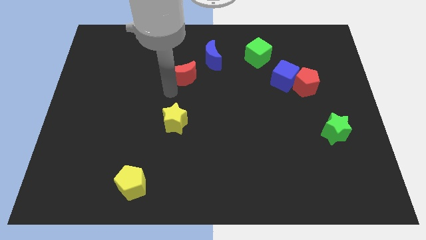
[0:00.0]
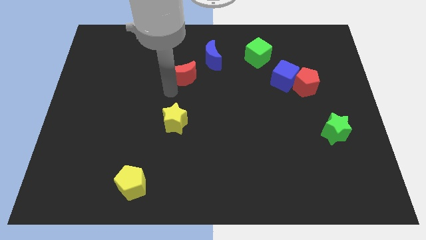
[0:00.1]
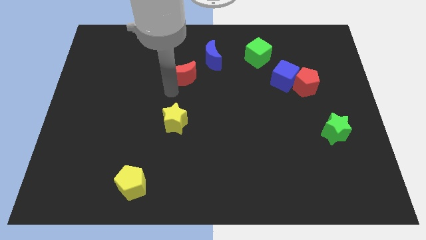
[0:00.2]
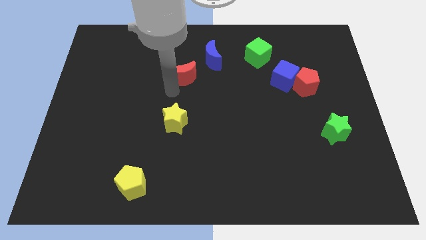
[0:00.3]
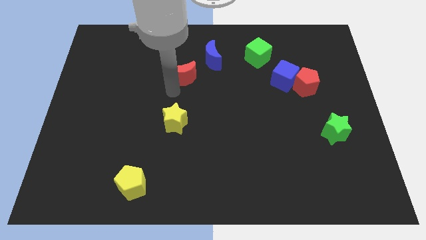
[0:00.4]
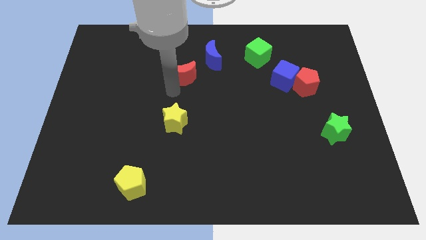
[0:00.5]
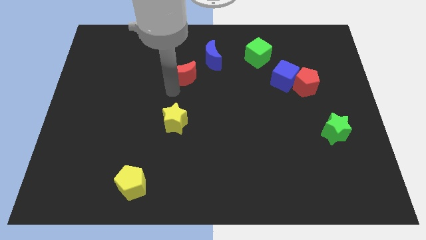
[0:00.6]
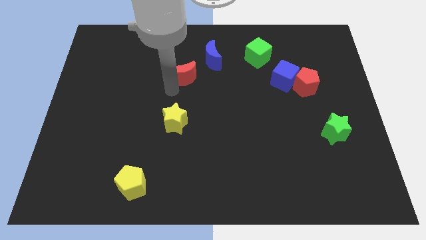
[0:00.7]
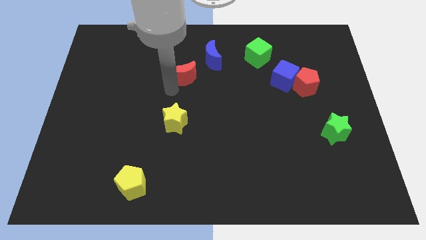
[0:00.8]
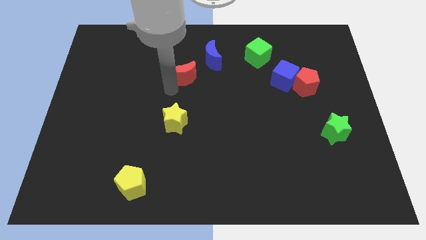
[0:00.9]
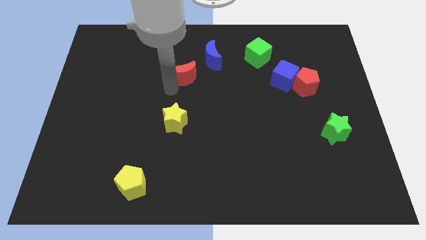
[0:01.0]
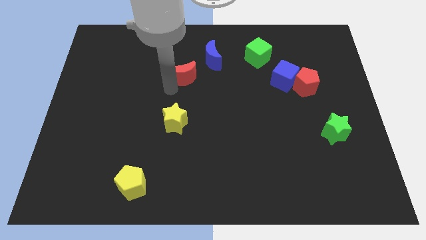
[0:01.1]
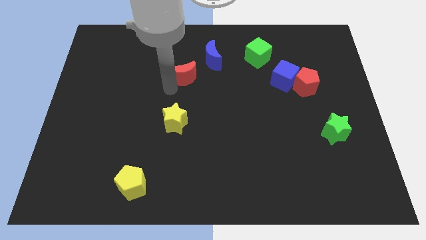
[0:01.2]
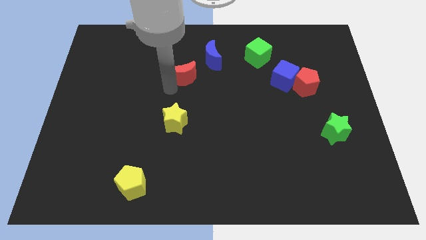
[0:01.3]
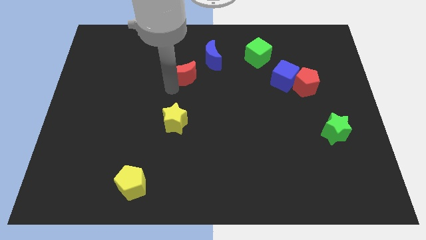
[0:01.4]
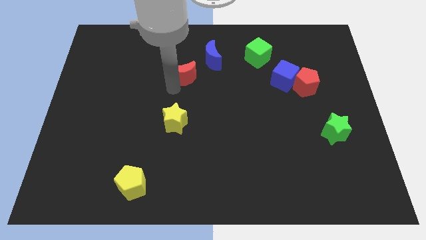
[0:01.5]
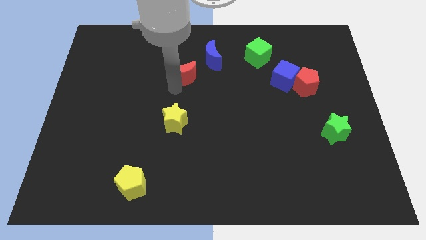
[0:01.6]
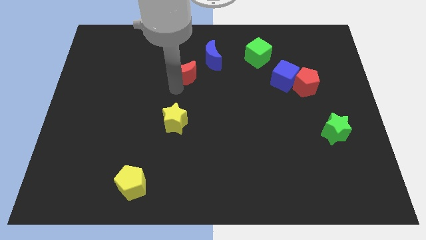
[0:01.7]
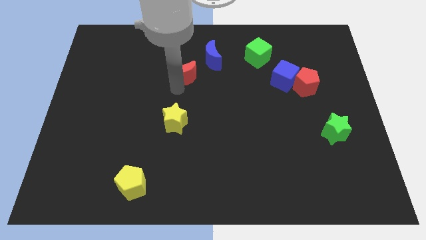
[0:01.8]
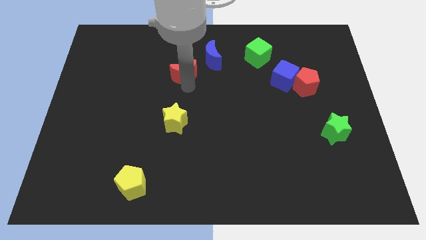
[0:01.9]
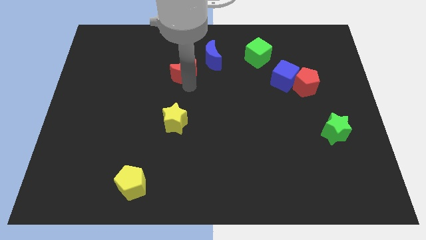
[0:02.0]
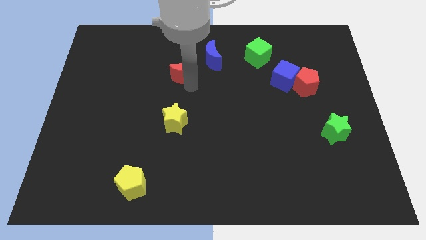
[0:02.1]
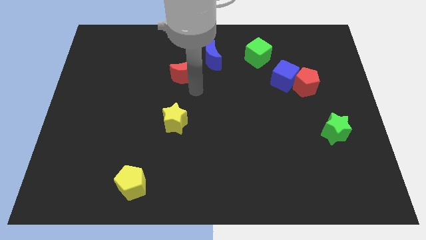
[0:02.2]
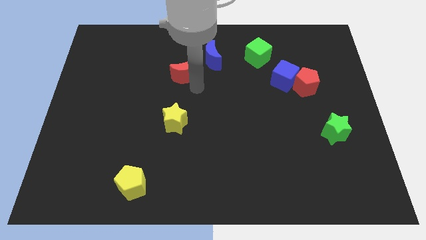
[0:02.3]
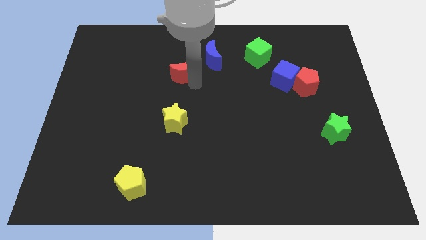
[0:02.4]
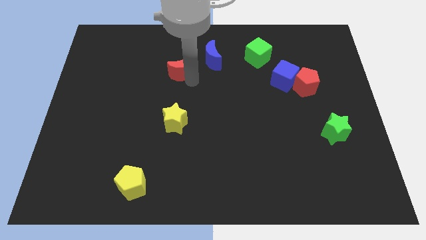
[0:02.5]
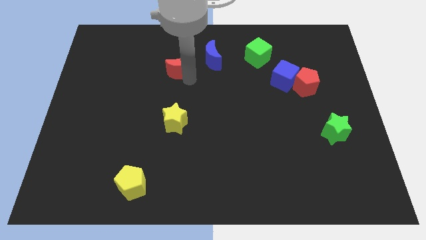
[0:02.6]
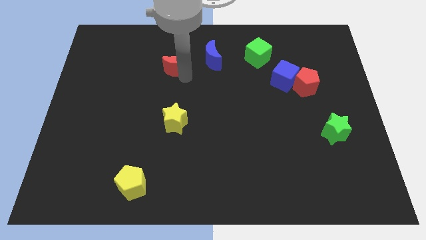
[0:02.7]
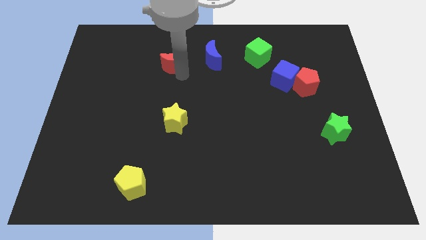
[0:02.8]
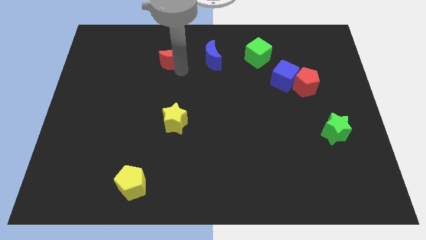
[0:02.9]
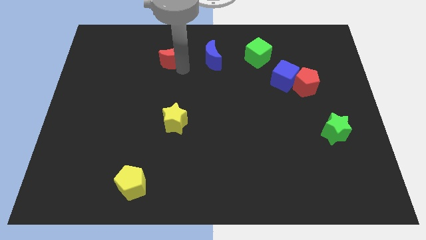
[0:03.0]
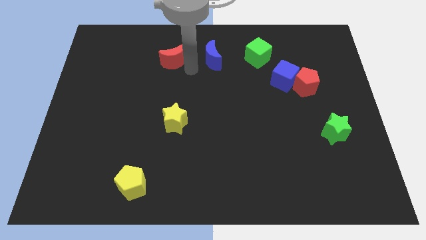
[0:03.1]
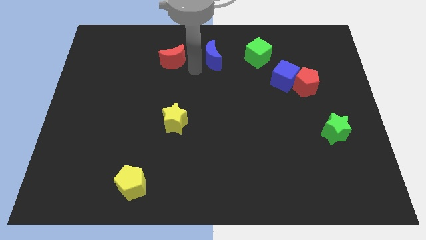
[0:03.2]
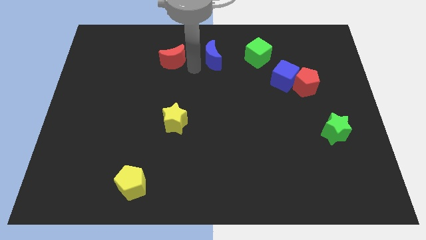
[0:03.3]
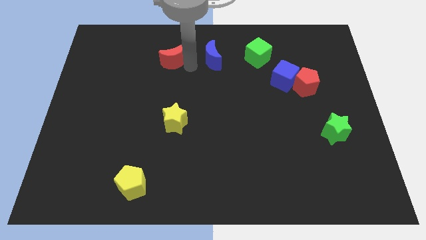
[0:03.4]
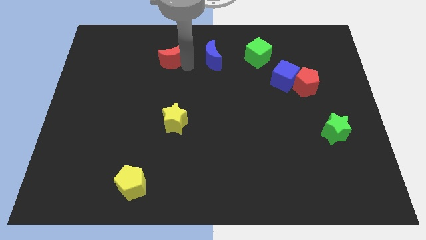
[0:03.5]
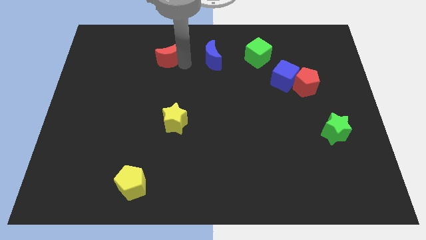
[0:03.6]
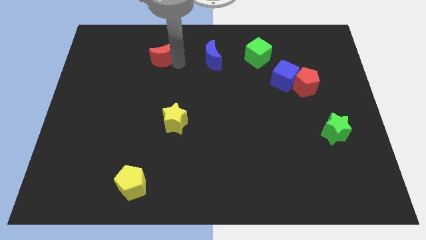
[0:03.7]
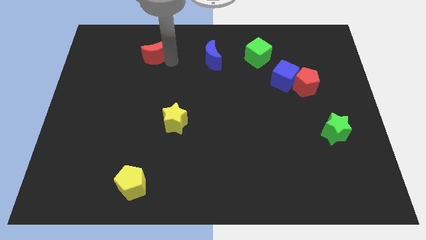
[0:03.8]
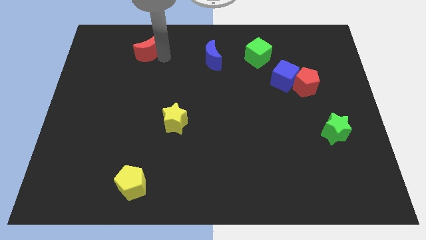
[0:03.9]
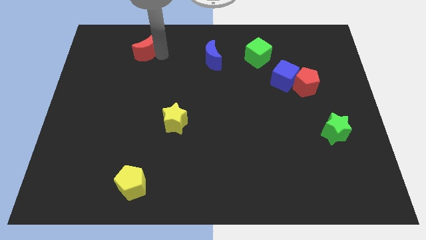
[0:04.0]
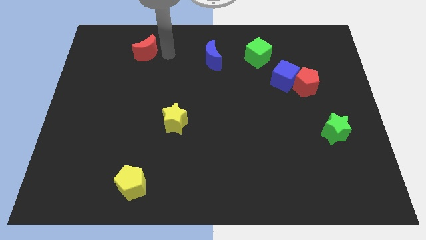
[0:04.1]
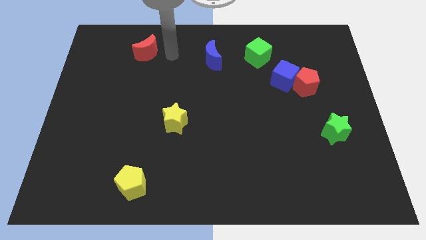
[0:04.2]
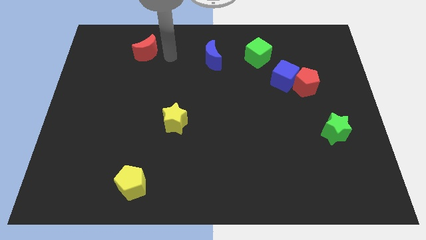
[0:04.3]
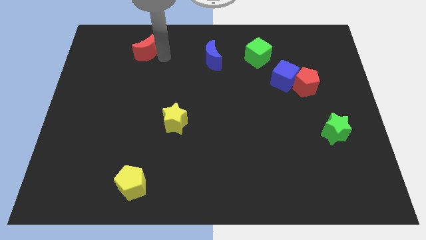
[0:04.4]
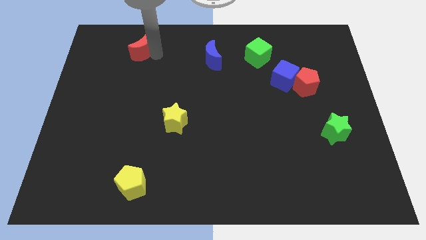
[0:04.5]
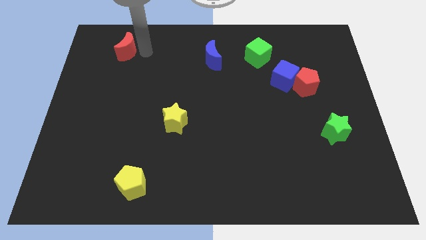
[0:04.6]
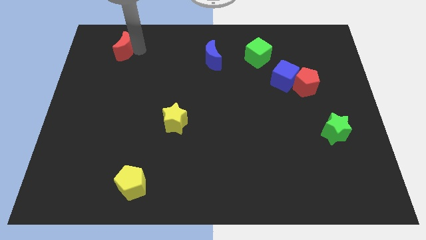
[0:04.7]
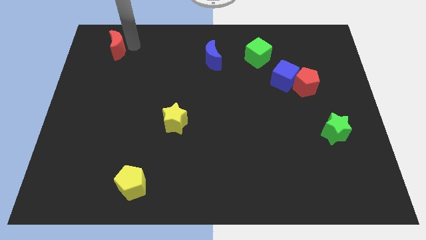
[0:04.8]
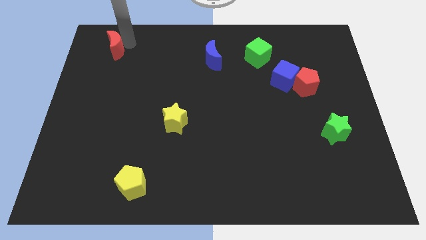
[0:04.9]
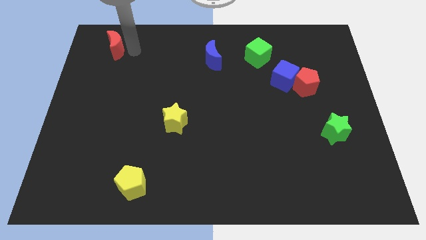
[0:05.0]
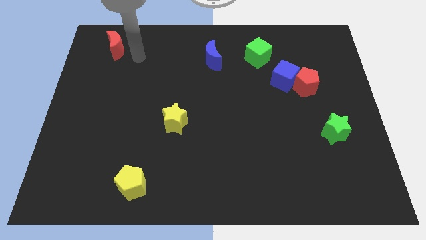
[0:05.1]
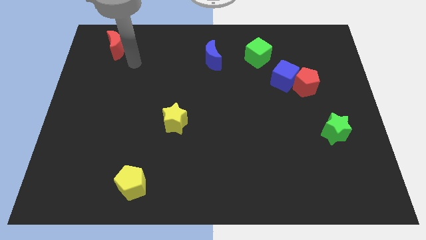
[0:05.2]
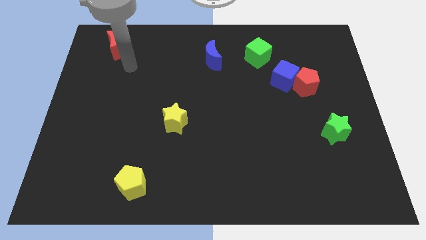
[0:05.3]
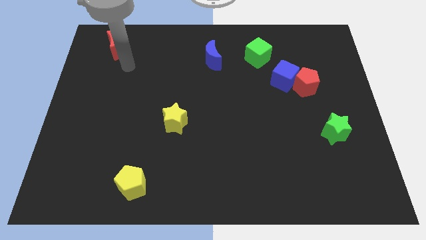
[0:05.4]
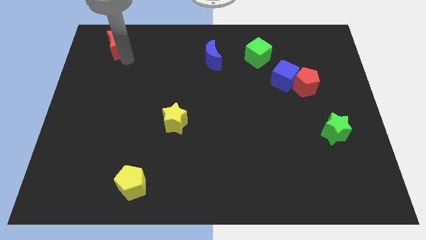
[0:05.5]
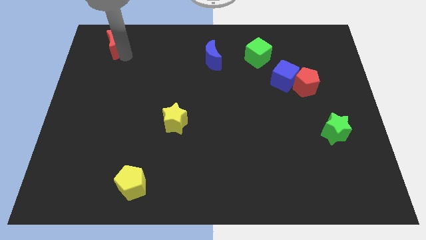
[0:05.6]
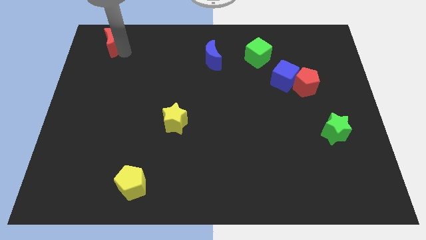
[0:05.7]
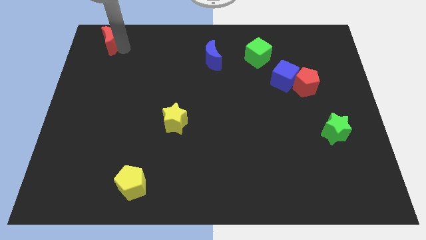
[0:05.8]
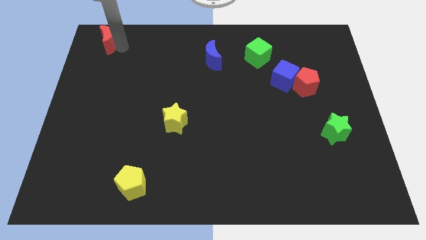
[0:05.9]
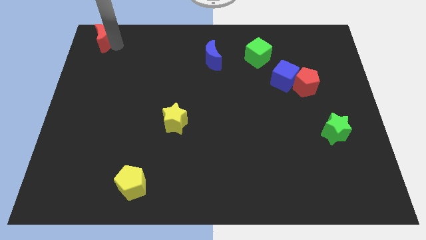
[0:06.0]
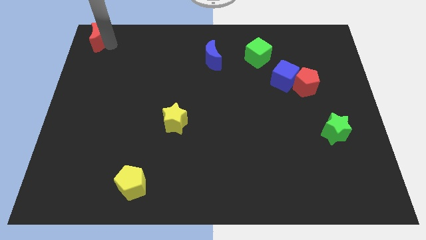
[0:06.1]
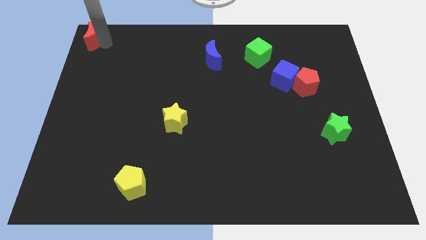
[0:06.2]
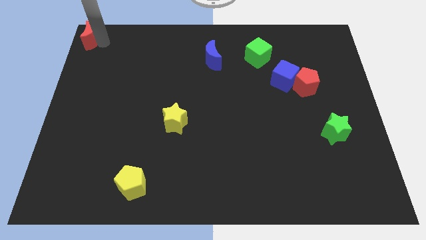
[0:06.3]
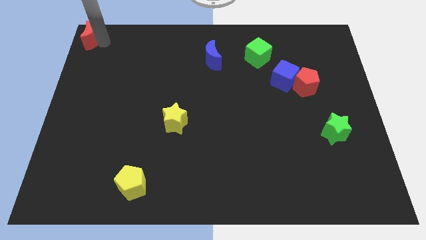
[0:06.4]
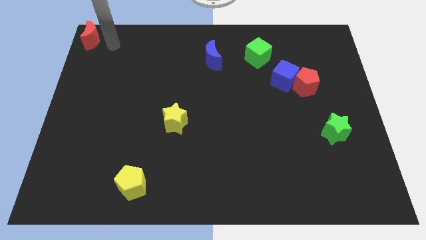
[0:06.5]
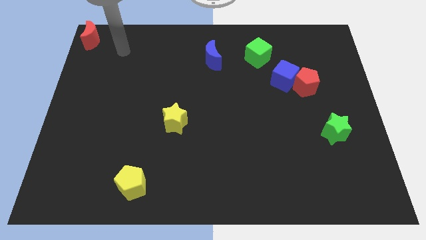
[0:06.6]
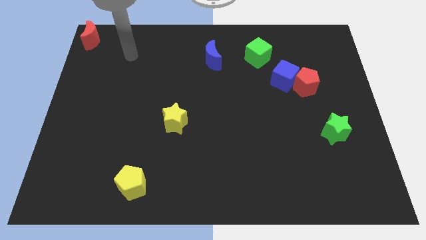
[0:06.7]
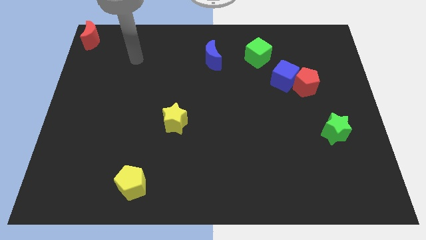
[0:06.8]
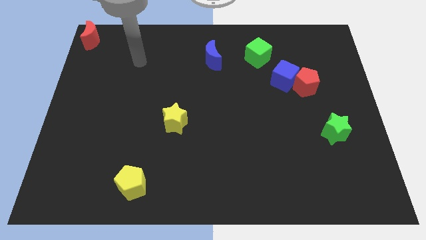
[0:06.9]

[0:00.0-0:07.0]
push the red crescent to the top left corner of the board

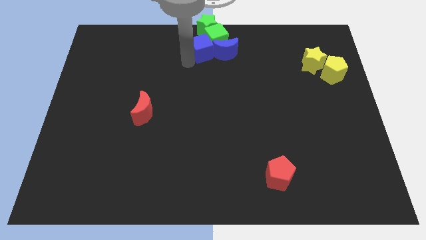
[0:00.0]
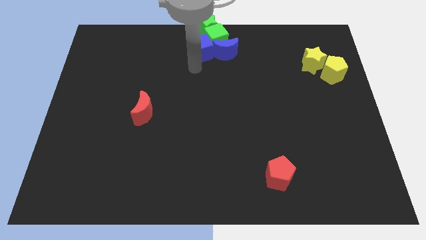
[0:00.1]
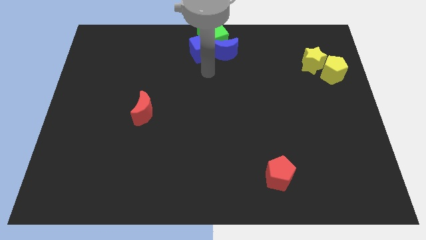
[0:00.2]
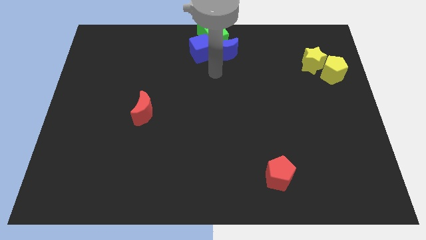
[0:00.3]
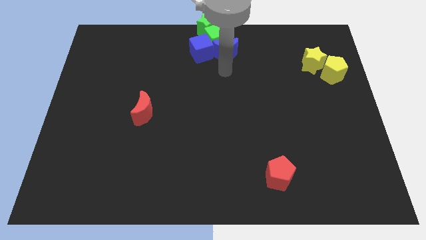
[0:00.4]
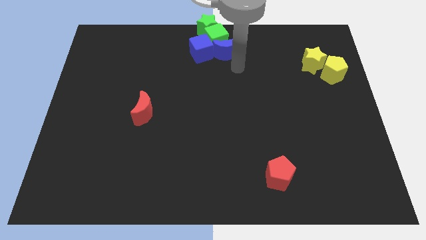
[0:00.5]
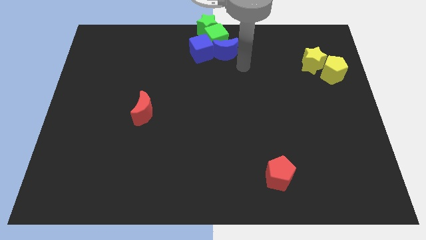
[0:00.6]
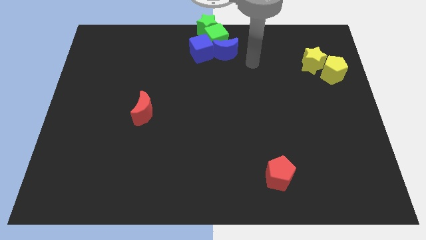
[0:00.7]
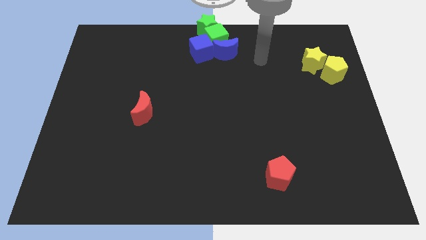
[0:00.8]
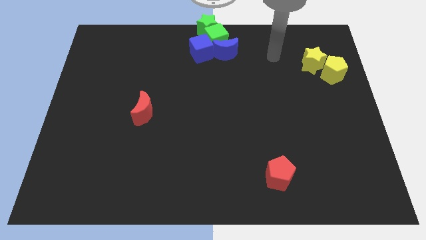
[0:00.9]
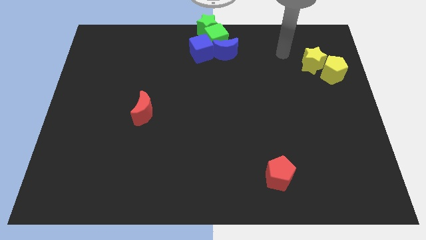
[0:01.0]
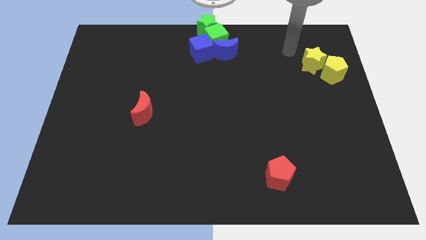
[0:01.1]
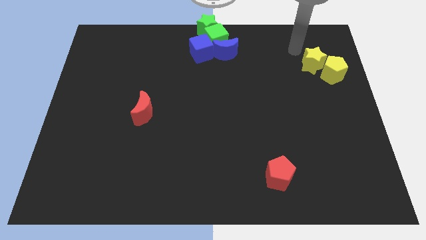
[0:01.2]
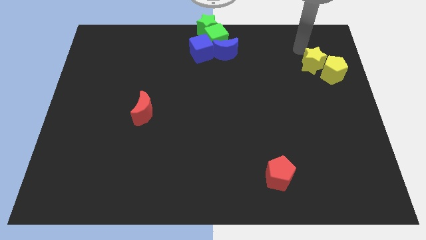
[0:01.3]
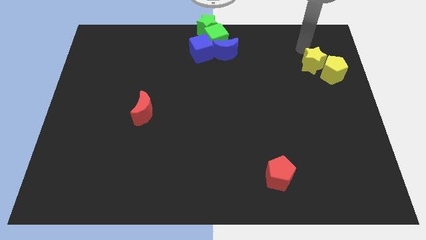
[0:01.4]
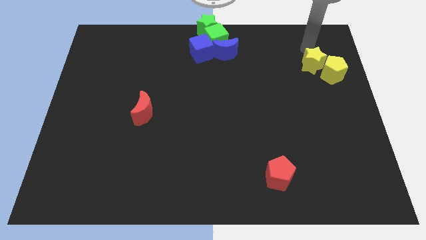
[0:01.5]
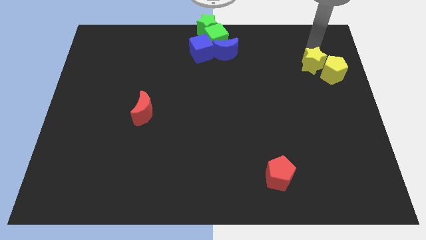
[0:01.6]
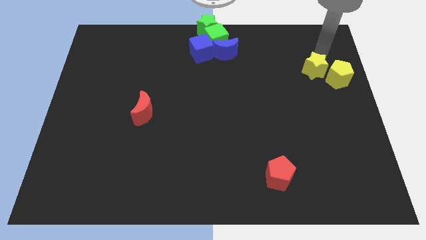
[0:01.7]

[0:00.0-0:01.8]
slide the pointer to the top of the yellow star

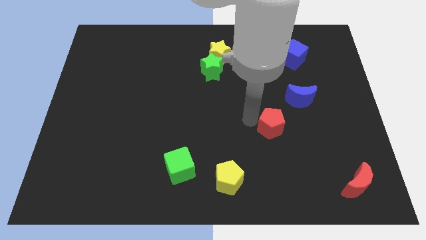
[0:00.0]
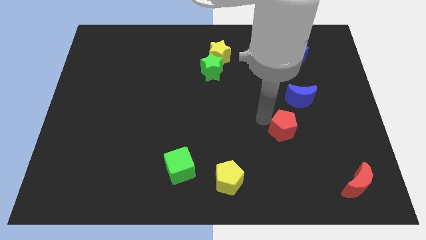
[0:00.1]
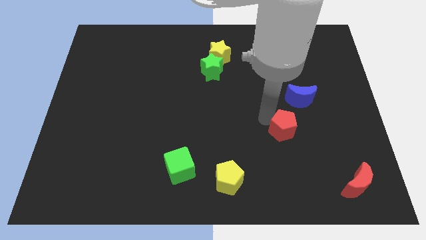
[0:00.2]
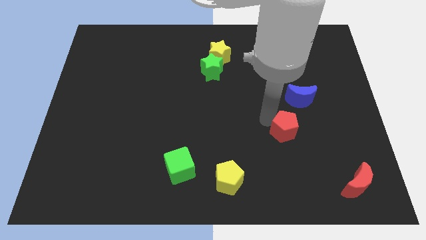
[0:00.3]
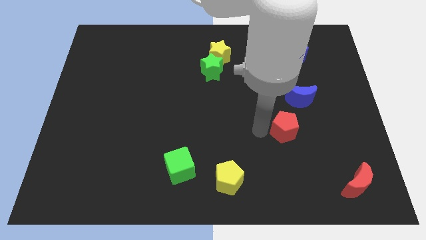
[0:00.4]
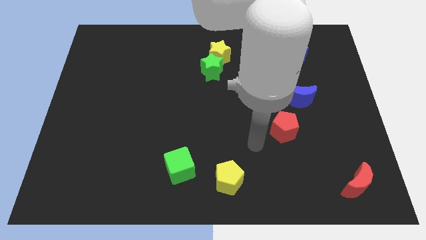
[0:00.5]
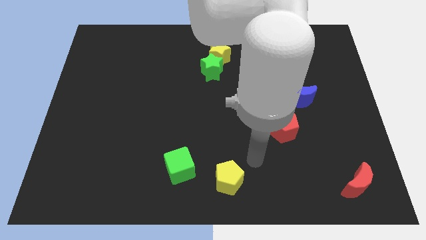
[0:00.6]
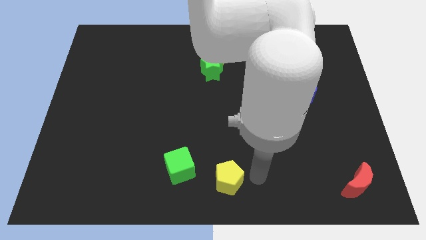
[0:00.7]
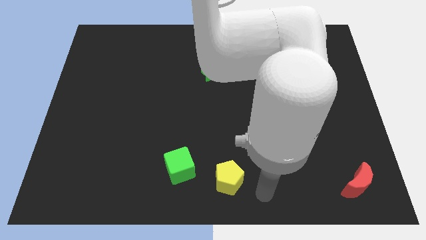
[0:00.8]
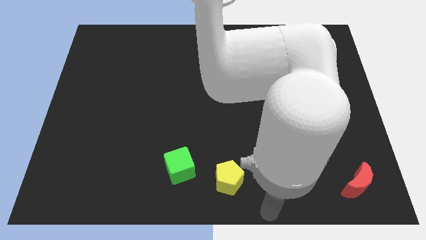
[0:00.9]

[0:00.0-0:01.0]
place your arm to the right bottom of the board
